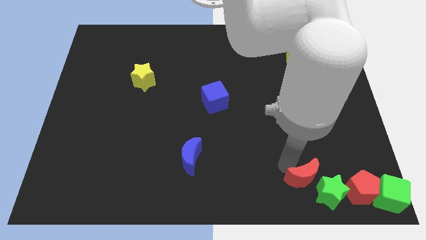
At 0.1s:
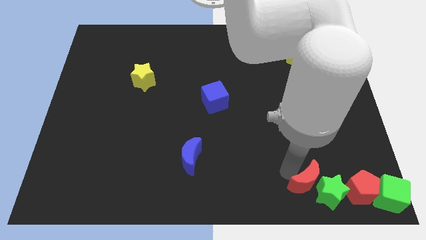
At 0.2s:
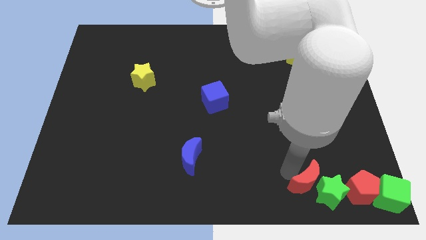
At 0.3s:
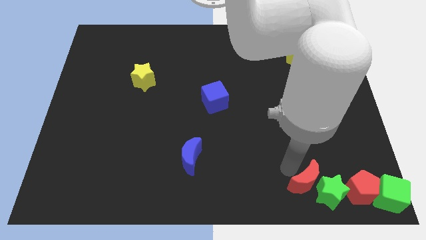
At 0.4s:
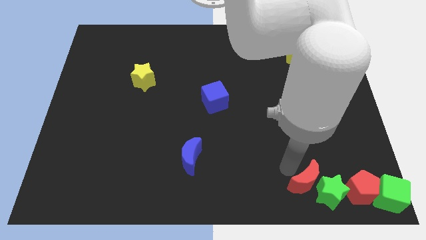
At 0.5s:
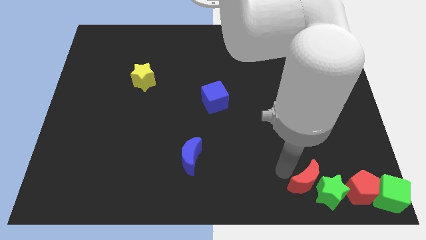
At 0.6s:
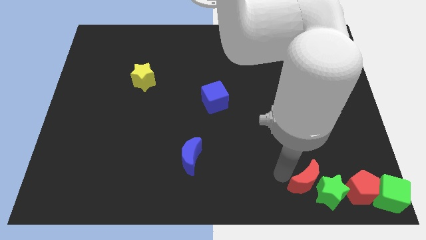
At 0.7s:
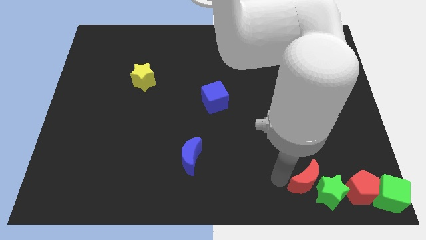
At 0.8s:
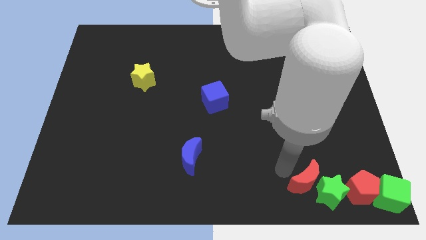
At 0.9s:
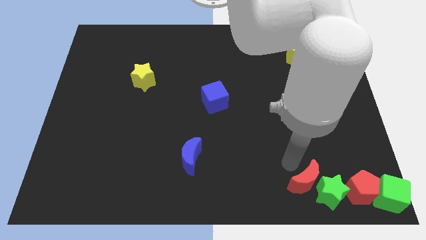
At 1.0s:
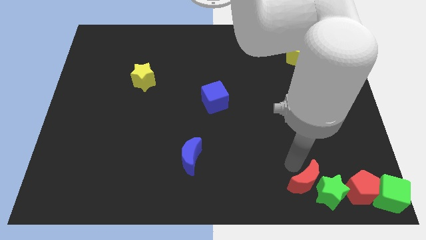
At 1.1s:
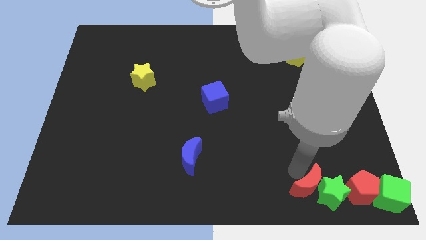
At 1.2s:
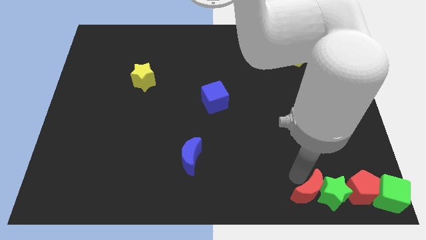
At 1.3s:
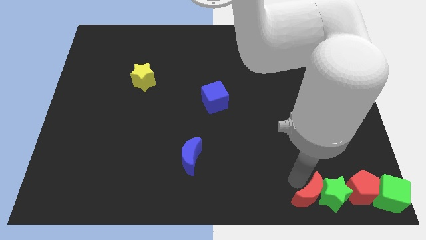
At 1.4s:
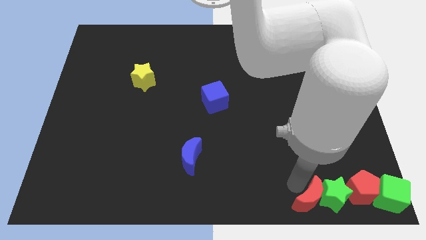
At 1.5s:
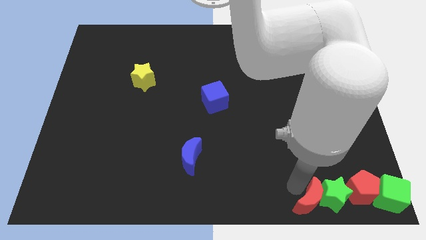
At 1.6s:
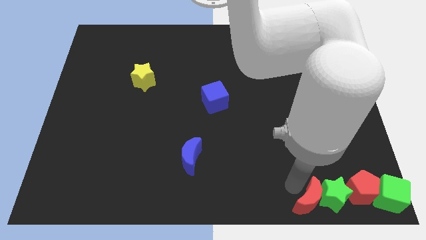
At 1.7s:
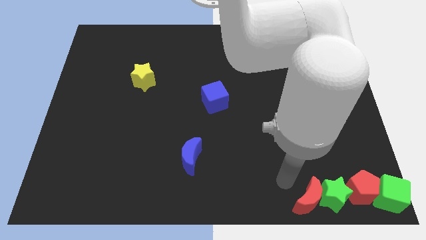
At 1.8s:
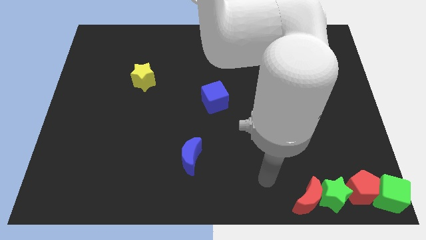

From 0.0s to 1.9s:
move red moon beside left to the green star

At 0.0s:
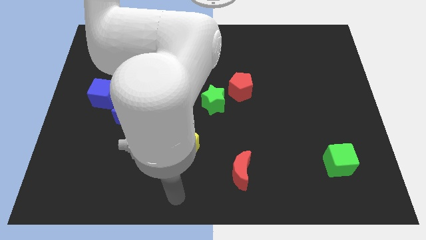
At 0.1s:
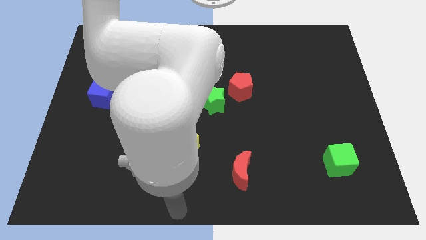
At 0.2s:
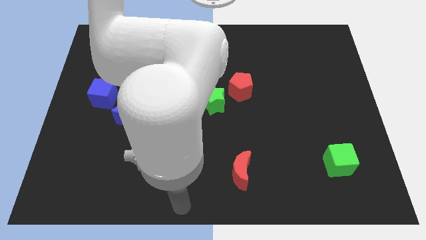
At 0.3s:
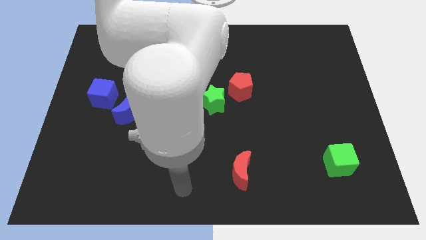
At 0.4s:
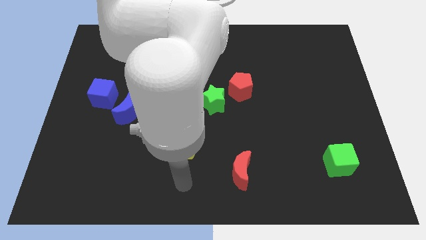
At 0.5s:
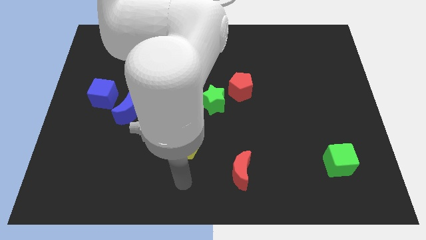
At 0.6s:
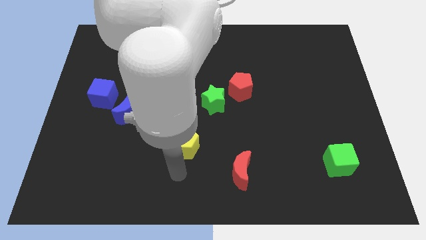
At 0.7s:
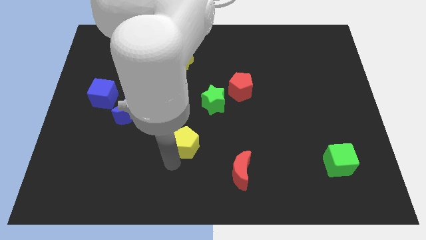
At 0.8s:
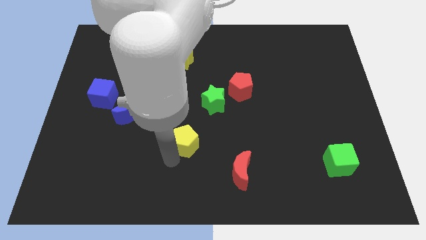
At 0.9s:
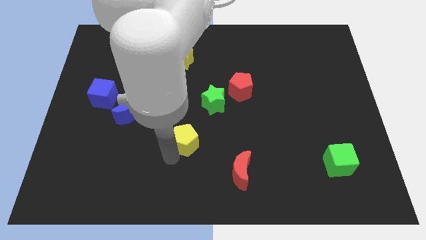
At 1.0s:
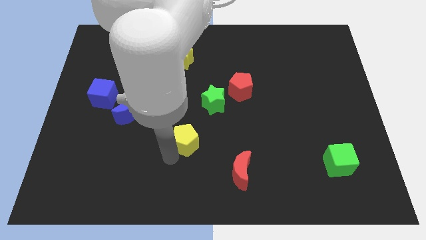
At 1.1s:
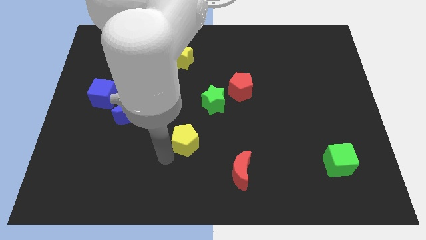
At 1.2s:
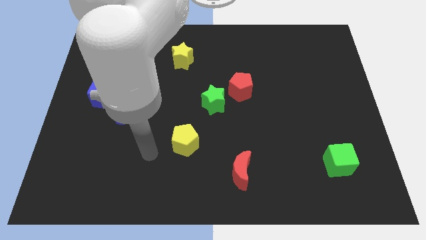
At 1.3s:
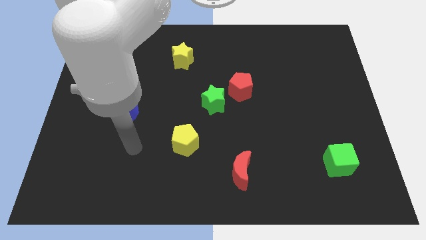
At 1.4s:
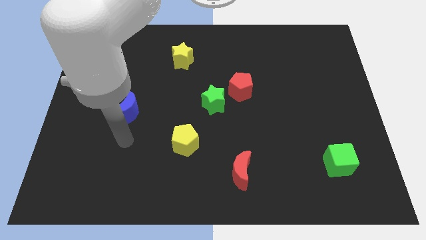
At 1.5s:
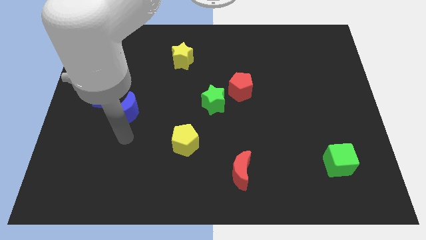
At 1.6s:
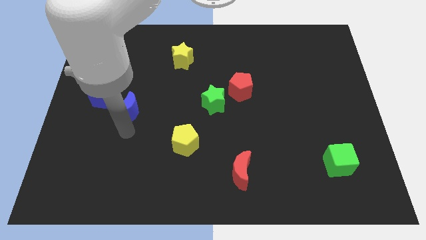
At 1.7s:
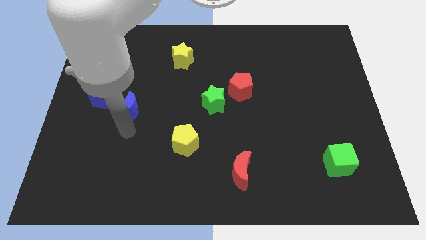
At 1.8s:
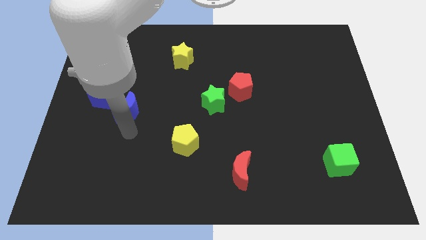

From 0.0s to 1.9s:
move your arm to the bottom of the blue moon

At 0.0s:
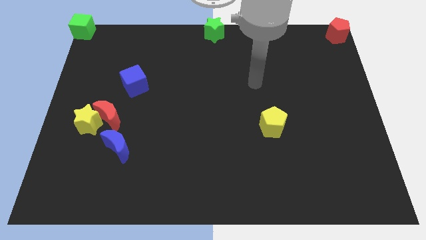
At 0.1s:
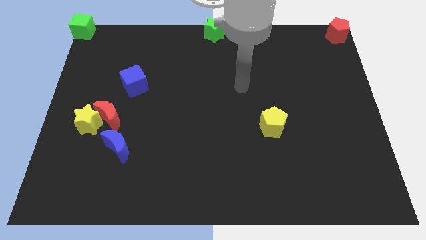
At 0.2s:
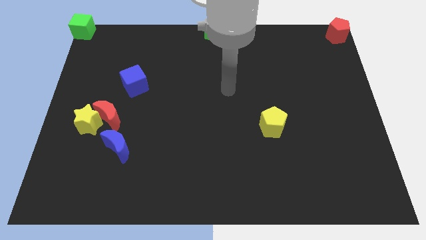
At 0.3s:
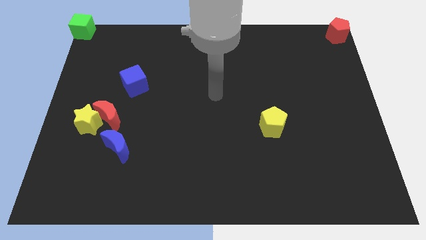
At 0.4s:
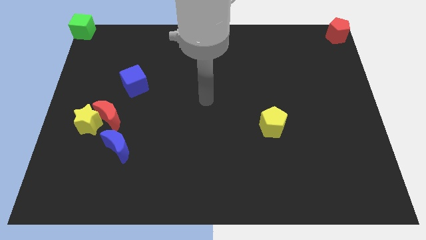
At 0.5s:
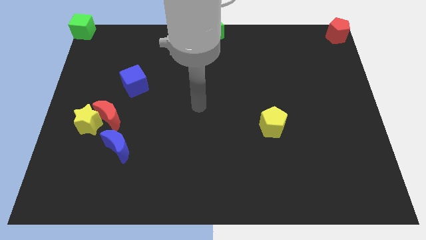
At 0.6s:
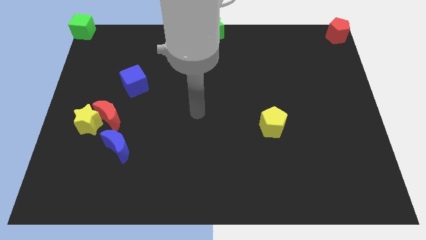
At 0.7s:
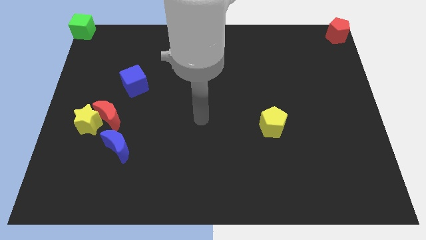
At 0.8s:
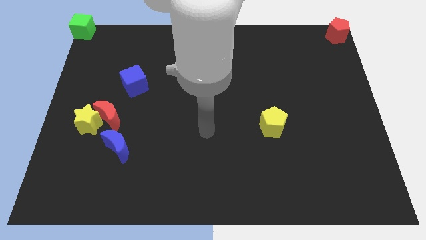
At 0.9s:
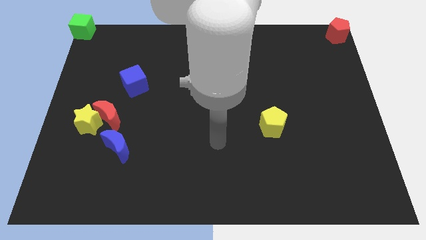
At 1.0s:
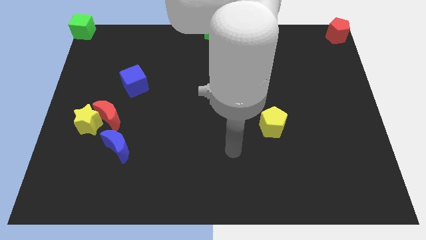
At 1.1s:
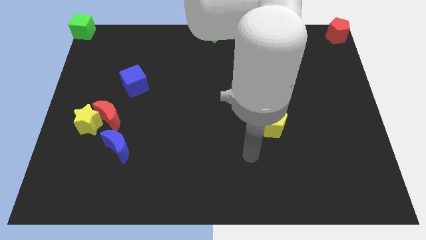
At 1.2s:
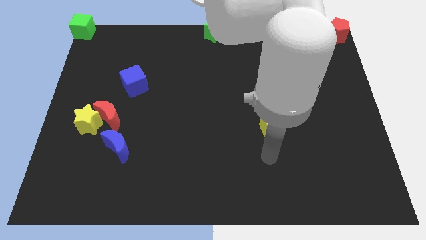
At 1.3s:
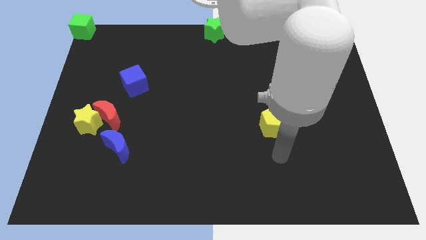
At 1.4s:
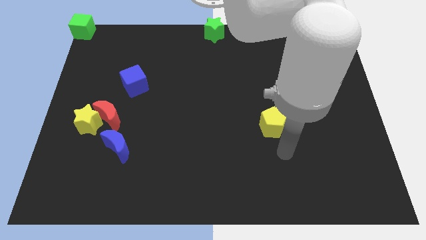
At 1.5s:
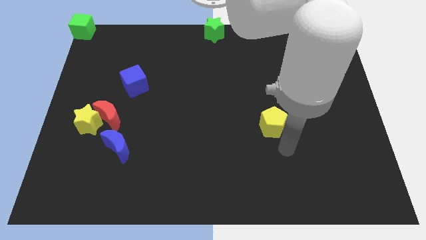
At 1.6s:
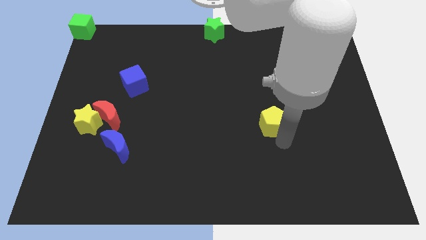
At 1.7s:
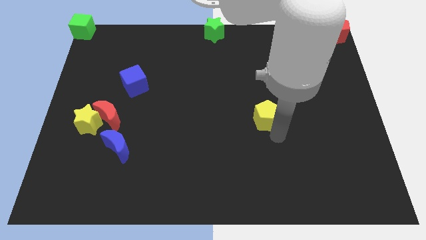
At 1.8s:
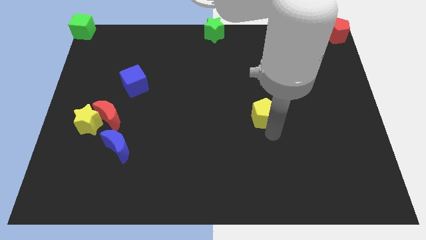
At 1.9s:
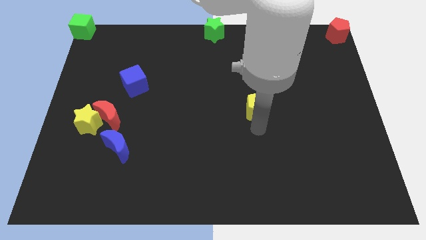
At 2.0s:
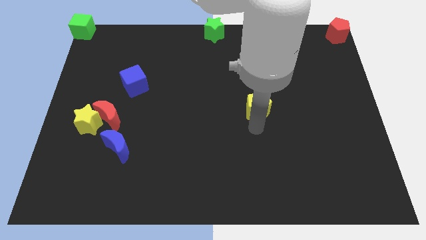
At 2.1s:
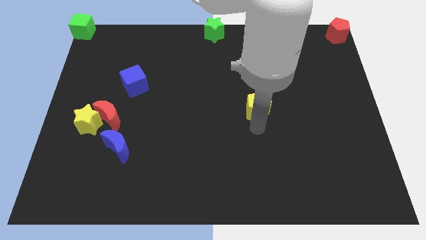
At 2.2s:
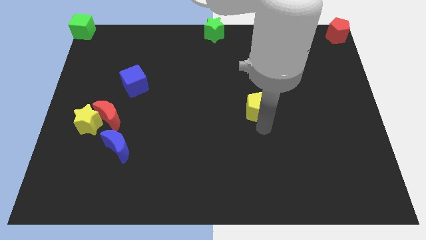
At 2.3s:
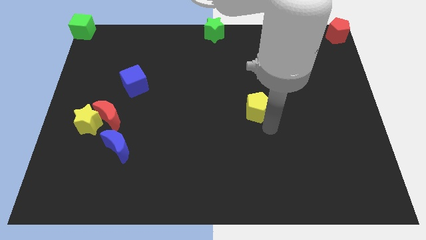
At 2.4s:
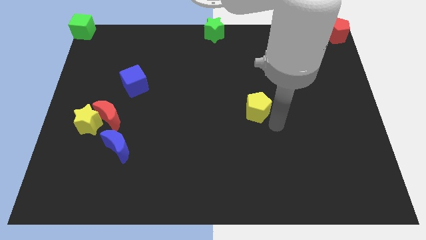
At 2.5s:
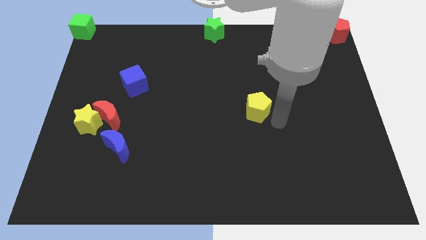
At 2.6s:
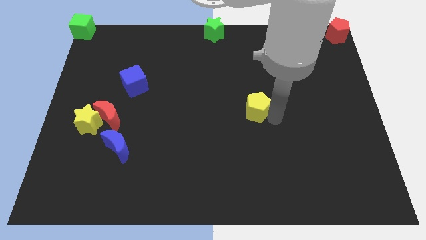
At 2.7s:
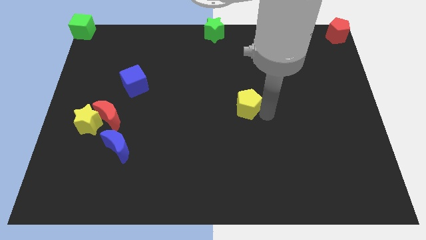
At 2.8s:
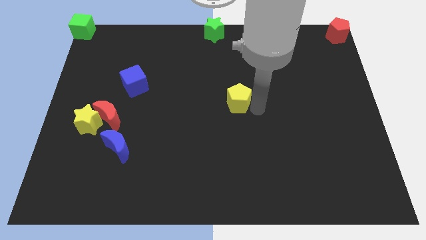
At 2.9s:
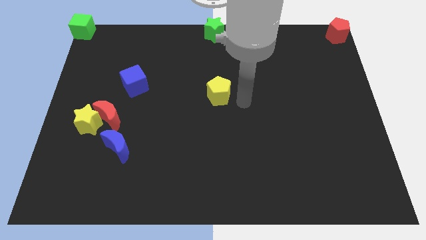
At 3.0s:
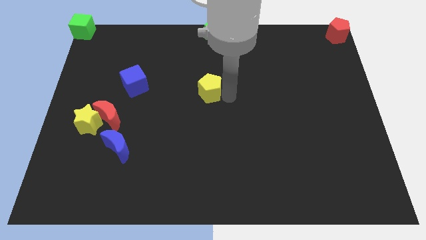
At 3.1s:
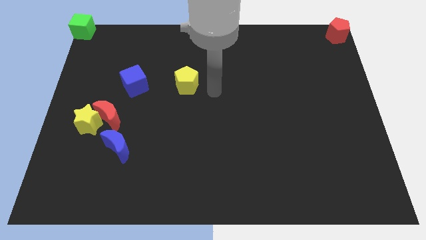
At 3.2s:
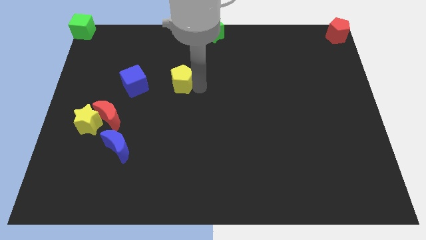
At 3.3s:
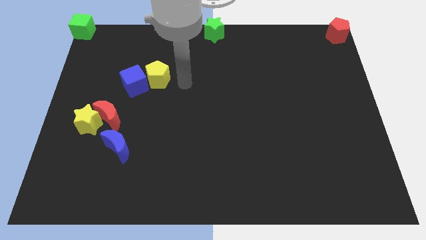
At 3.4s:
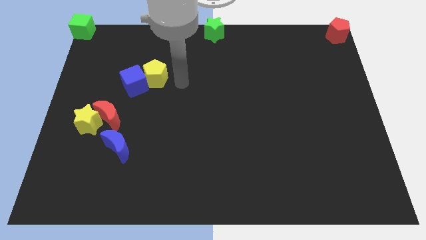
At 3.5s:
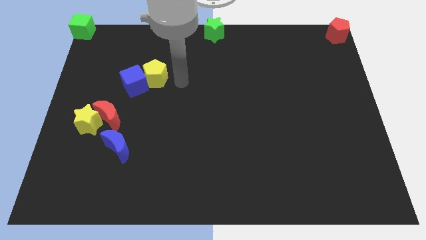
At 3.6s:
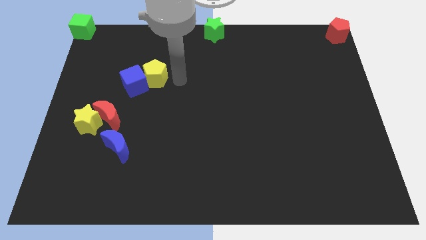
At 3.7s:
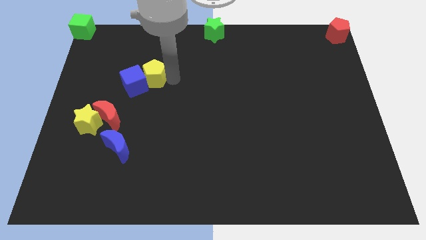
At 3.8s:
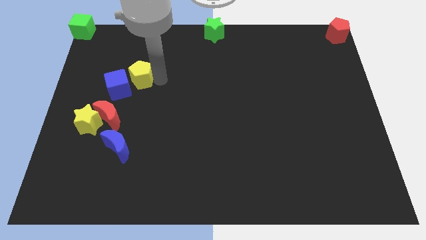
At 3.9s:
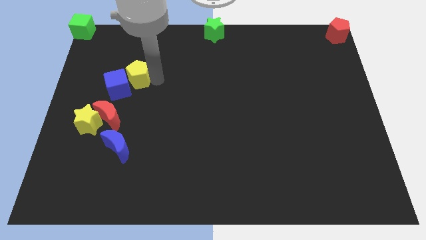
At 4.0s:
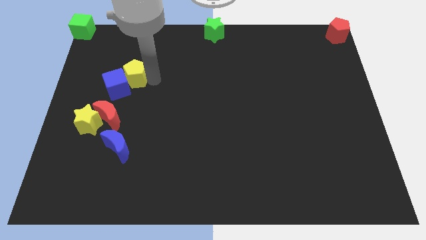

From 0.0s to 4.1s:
push the yellow pentagon into blue cube

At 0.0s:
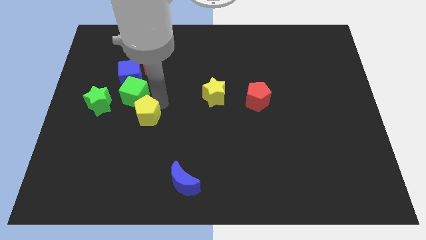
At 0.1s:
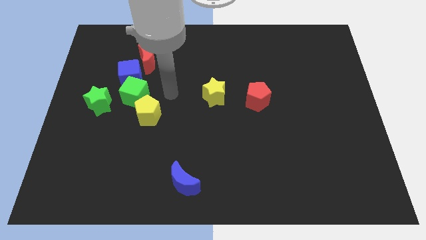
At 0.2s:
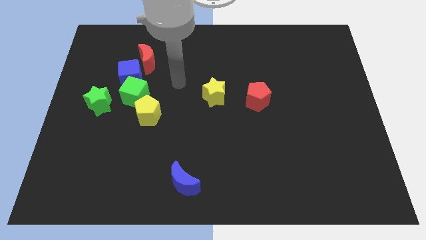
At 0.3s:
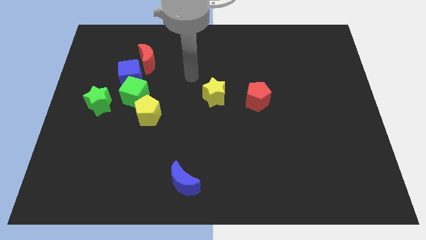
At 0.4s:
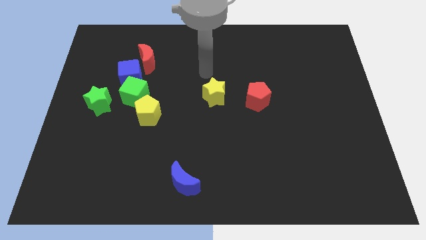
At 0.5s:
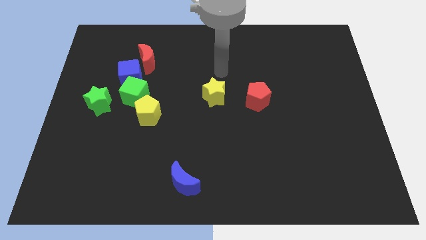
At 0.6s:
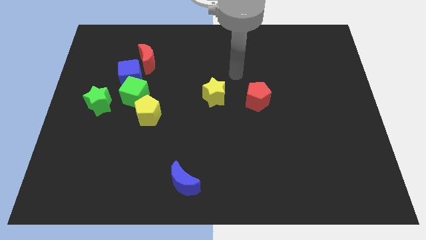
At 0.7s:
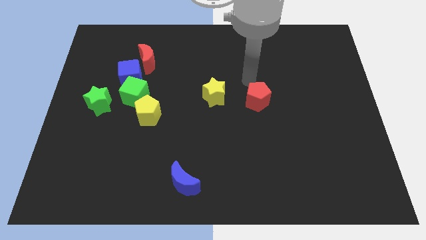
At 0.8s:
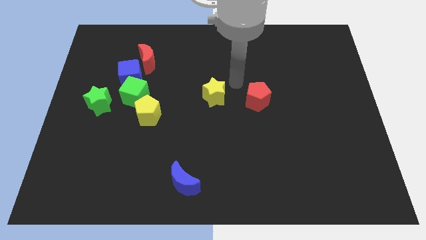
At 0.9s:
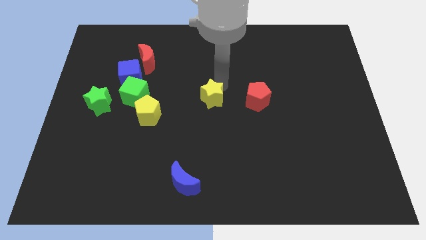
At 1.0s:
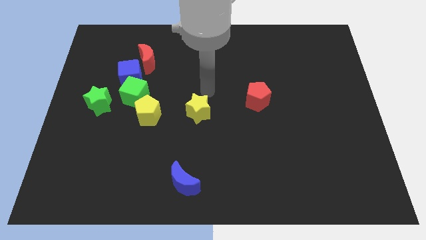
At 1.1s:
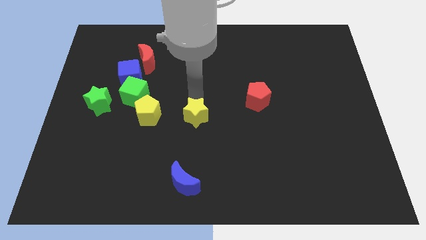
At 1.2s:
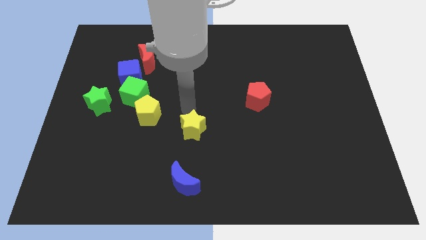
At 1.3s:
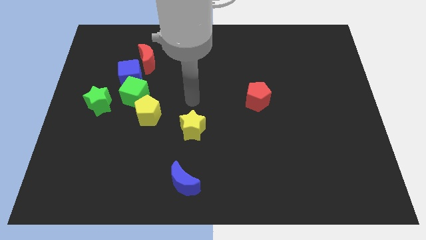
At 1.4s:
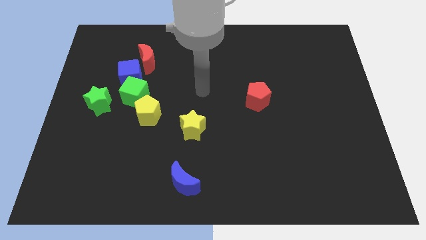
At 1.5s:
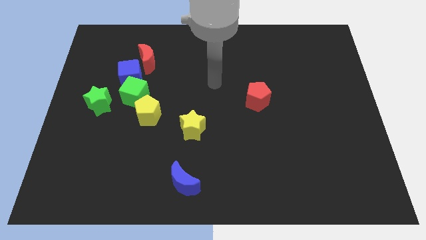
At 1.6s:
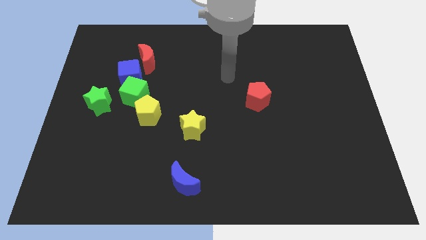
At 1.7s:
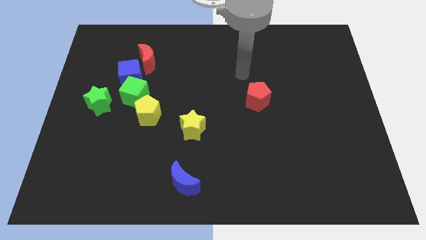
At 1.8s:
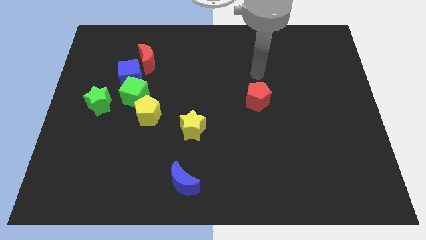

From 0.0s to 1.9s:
slightly push the yellow star to the bottom
